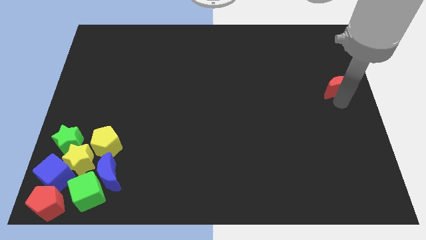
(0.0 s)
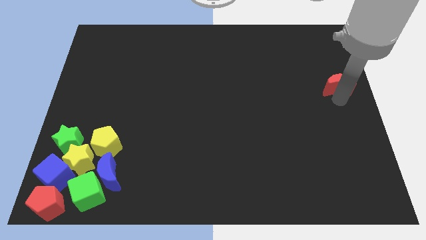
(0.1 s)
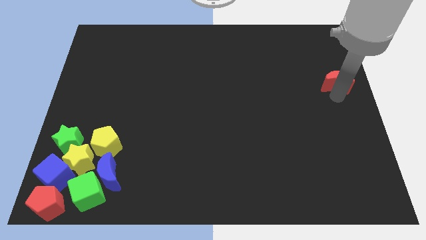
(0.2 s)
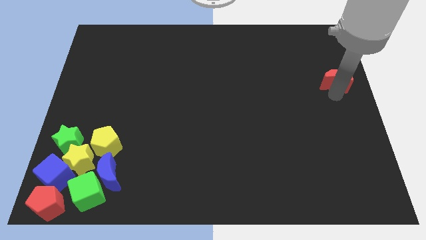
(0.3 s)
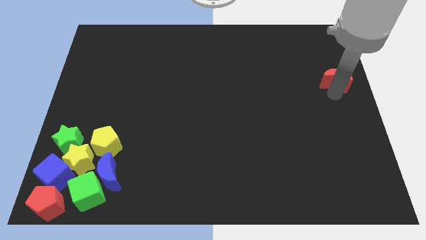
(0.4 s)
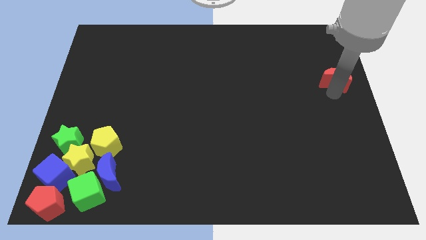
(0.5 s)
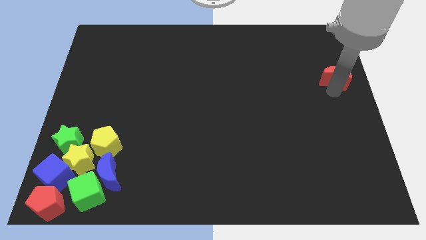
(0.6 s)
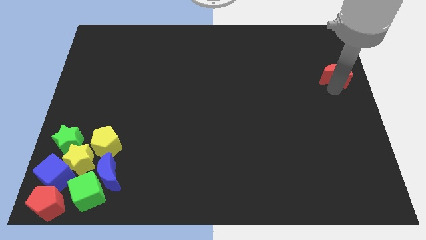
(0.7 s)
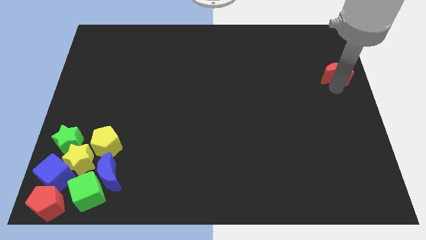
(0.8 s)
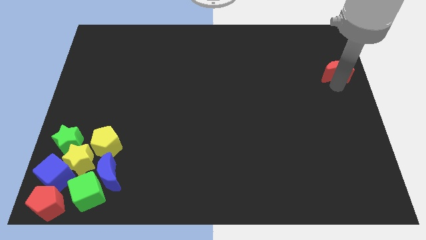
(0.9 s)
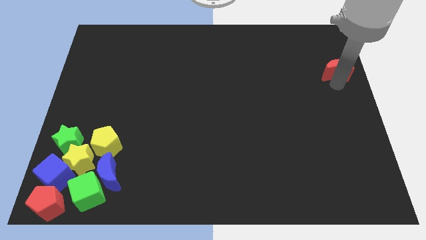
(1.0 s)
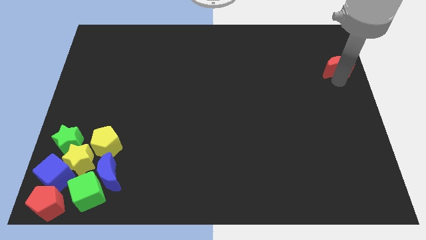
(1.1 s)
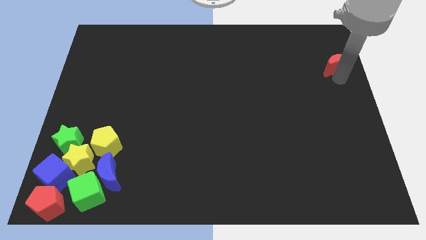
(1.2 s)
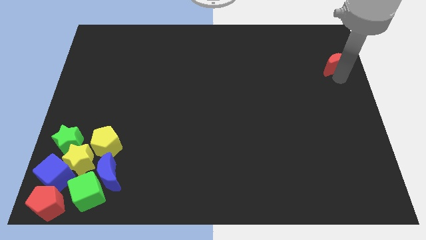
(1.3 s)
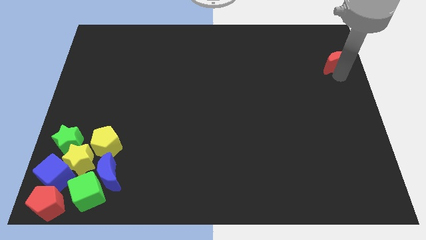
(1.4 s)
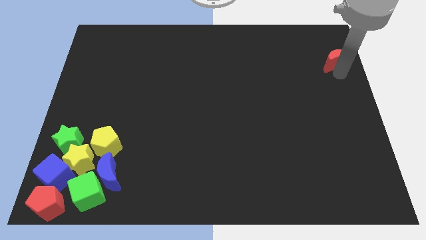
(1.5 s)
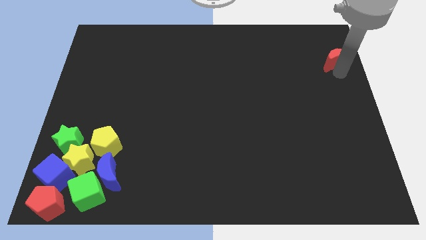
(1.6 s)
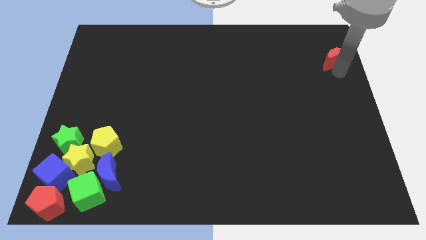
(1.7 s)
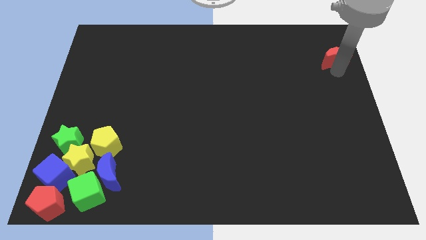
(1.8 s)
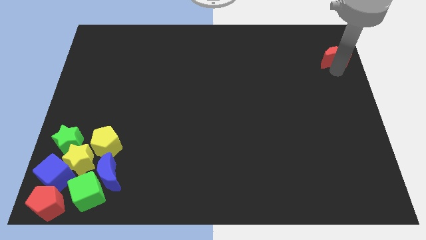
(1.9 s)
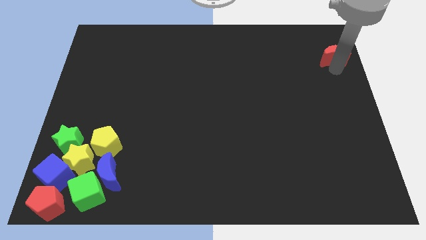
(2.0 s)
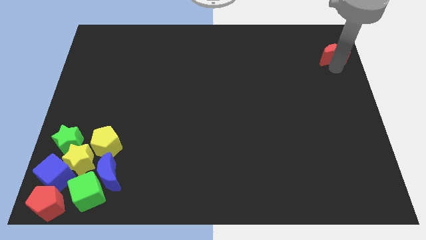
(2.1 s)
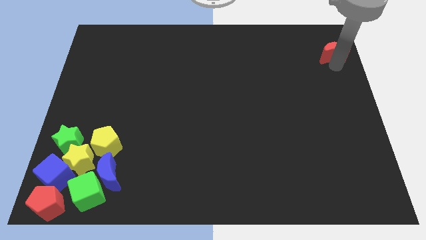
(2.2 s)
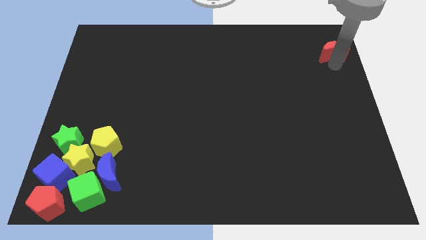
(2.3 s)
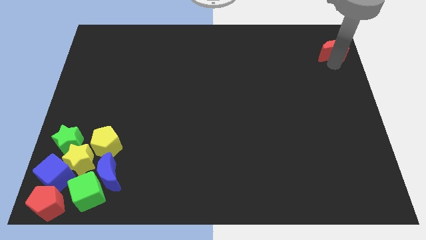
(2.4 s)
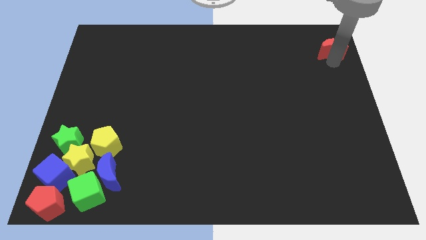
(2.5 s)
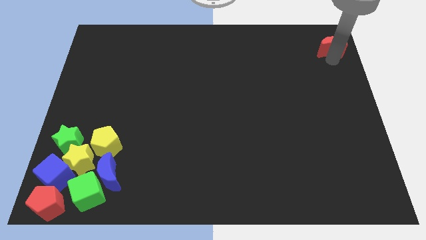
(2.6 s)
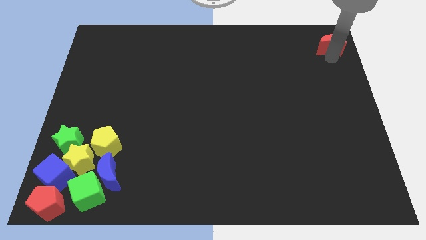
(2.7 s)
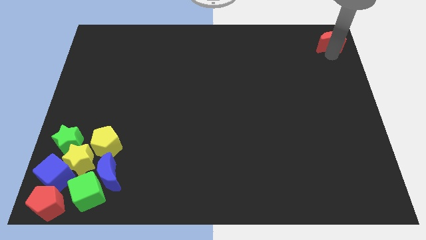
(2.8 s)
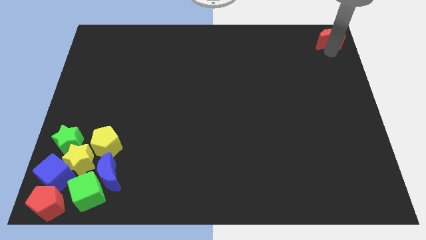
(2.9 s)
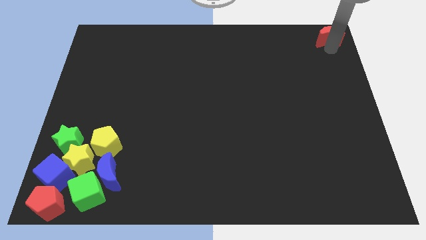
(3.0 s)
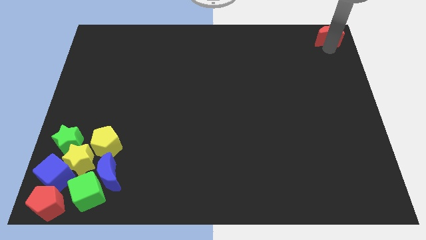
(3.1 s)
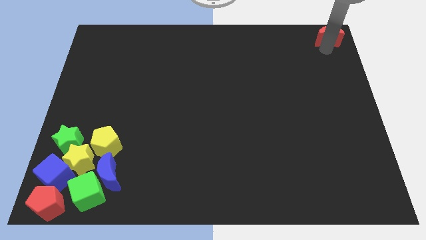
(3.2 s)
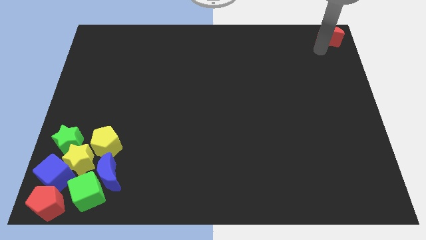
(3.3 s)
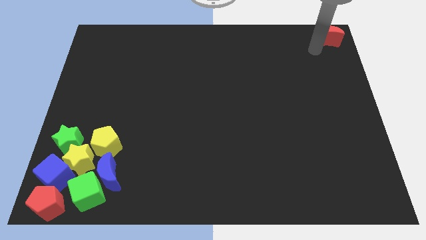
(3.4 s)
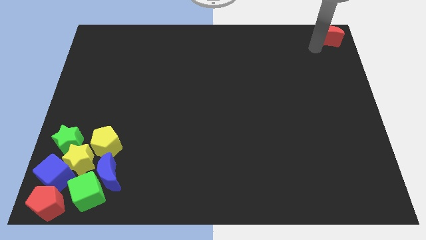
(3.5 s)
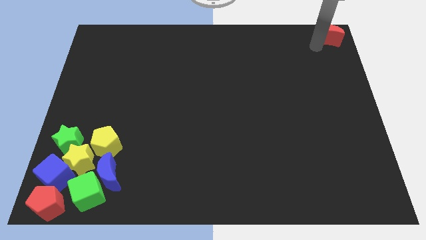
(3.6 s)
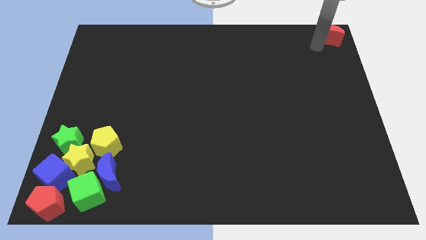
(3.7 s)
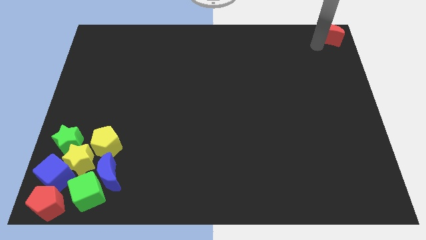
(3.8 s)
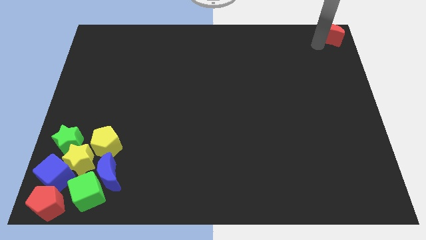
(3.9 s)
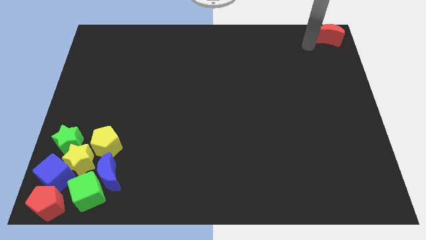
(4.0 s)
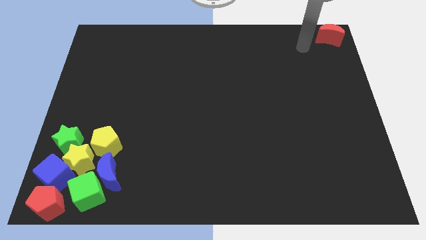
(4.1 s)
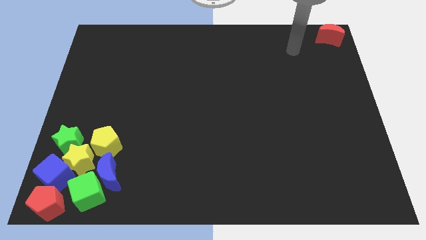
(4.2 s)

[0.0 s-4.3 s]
put the red crescent at the top right corner of the board

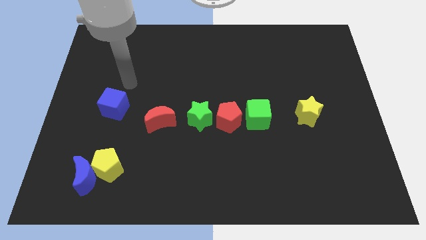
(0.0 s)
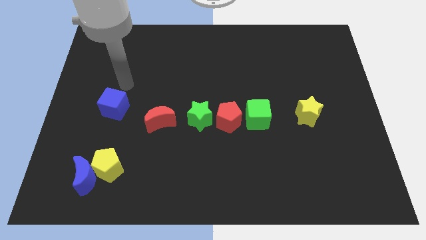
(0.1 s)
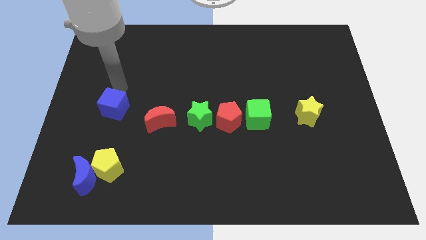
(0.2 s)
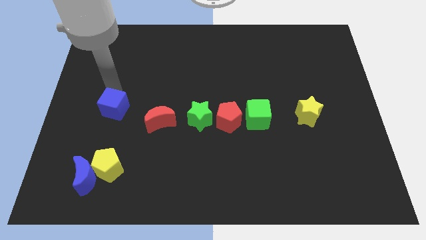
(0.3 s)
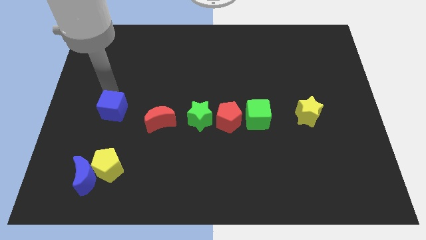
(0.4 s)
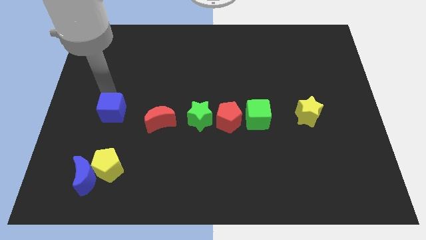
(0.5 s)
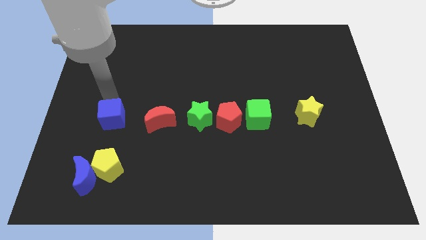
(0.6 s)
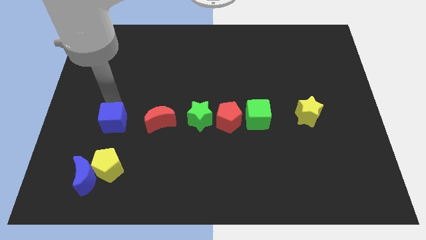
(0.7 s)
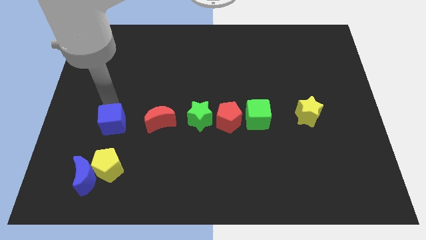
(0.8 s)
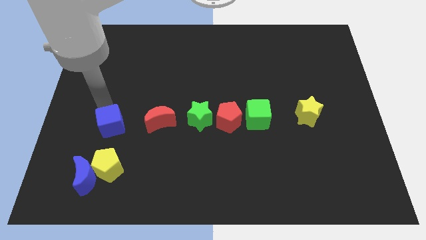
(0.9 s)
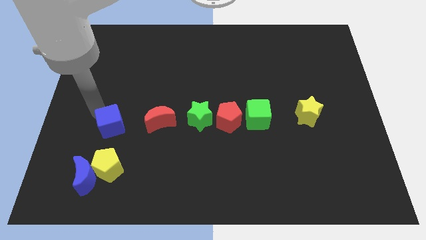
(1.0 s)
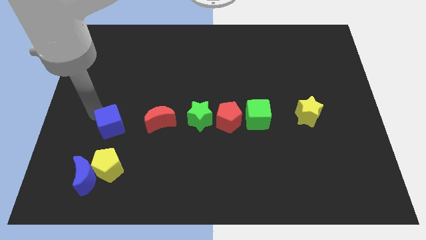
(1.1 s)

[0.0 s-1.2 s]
place blue cube to the left of red moon

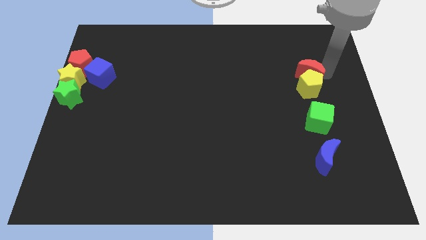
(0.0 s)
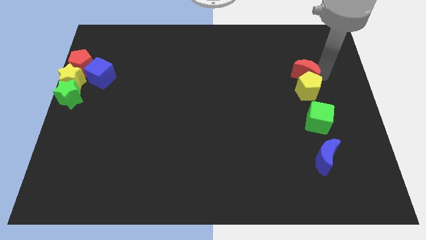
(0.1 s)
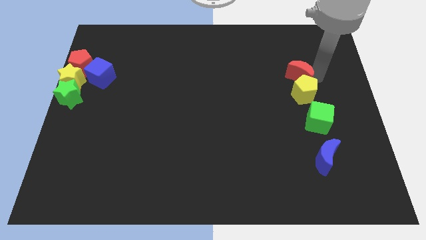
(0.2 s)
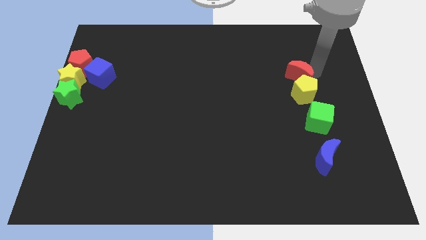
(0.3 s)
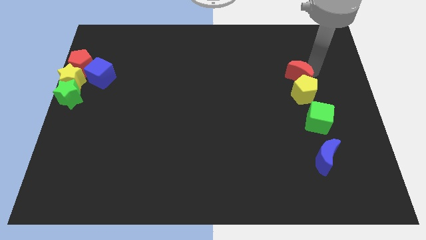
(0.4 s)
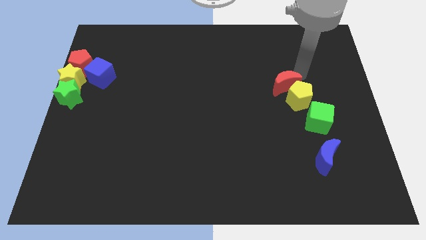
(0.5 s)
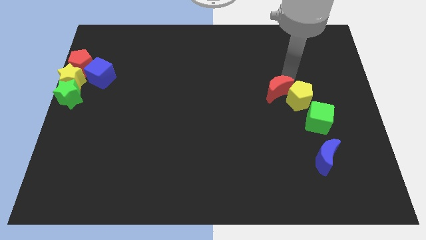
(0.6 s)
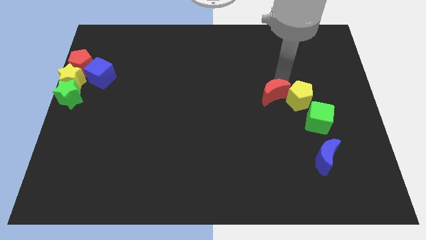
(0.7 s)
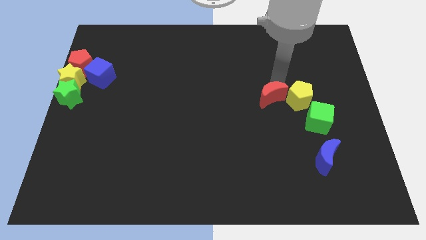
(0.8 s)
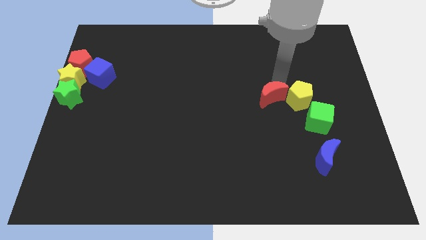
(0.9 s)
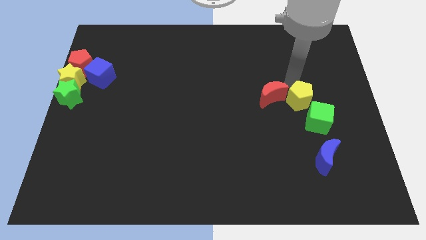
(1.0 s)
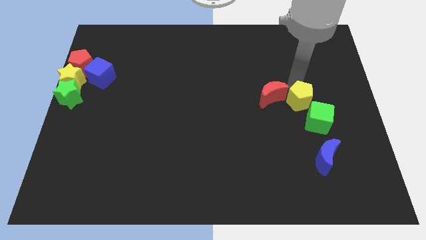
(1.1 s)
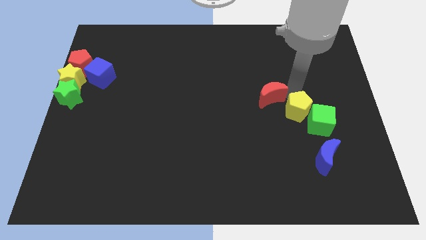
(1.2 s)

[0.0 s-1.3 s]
move the red moon to the left of the yellow pentagon

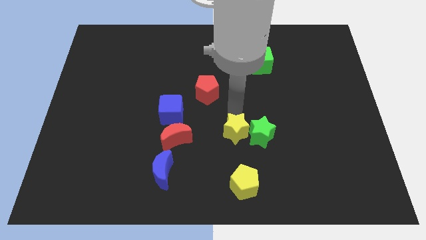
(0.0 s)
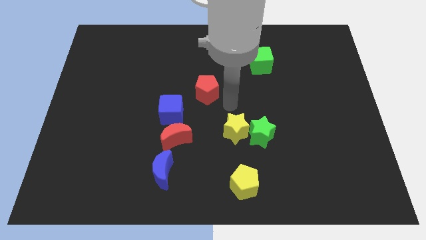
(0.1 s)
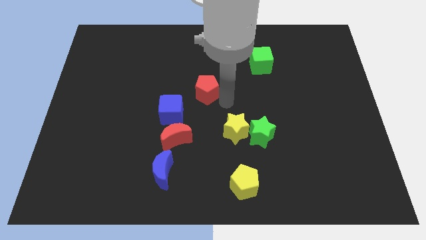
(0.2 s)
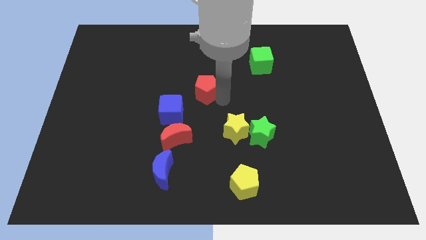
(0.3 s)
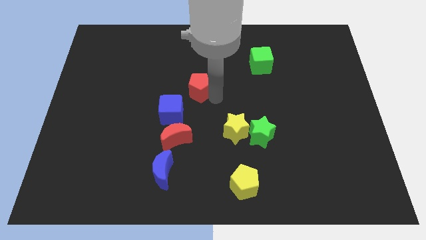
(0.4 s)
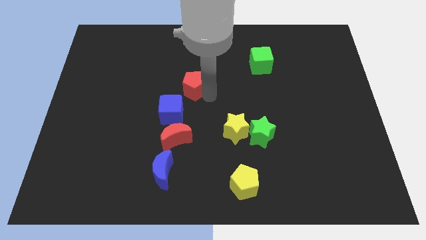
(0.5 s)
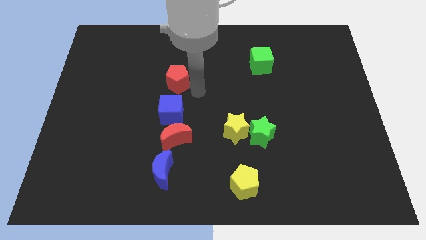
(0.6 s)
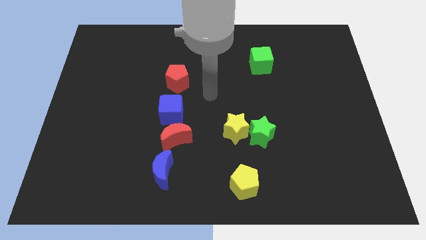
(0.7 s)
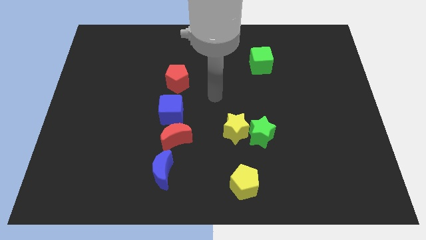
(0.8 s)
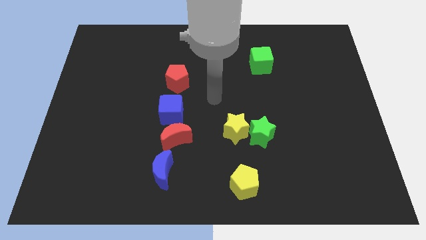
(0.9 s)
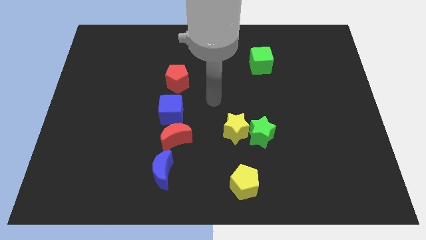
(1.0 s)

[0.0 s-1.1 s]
push the red pentagon vertically above the top side fo the blue cube

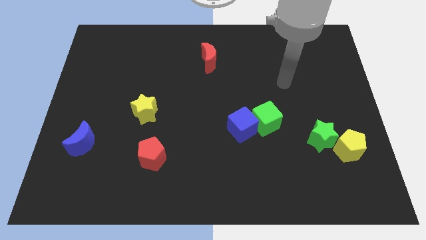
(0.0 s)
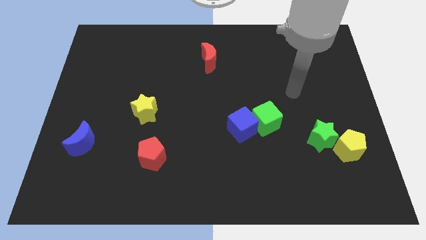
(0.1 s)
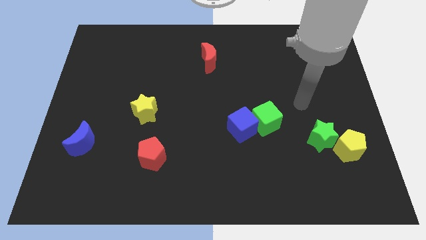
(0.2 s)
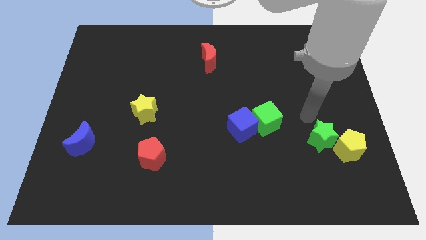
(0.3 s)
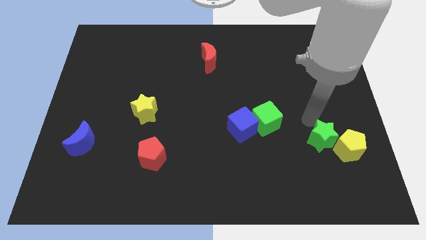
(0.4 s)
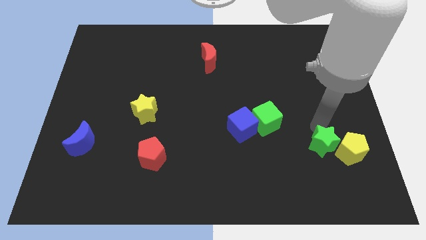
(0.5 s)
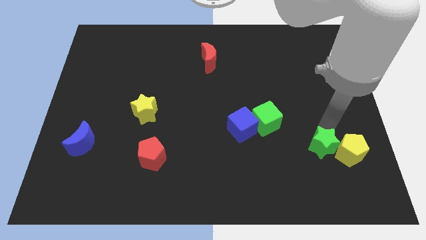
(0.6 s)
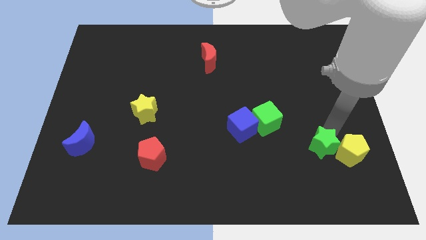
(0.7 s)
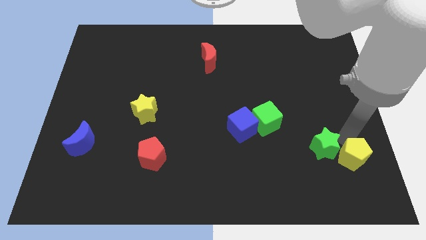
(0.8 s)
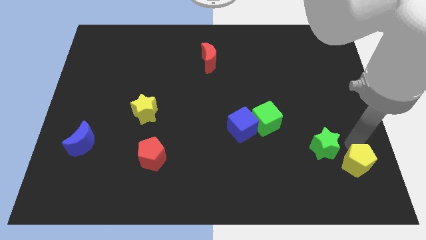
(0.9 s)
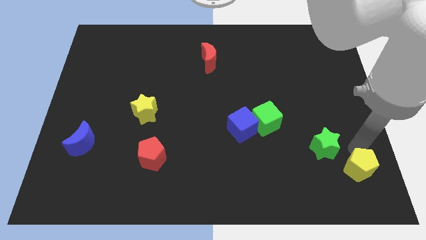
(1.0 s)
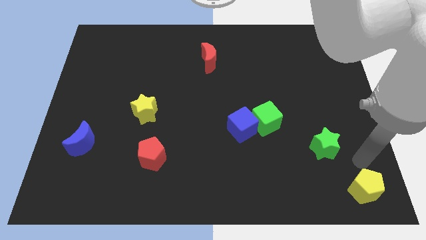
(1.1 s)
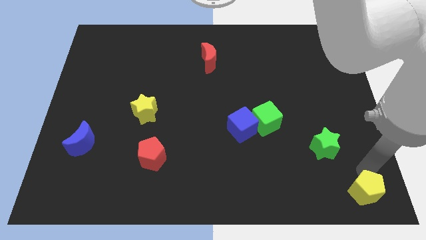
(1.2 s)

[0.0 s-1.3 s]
separate the yellow pentagon and the green star
